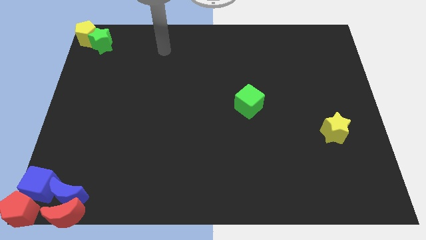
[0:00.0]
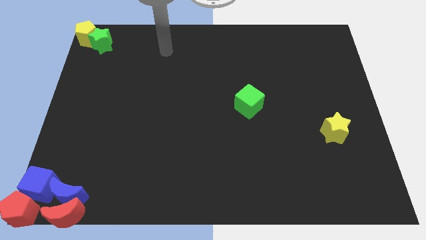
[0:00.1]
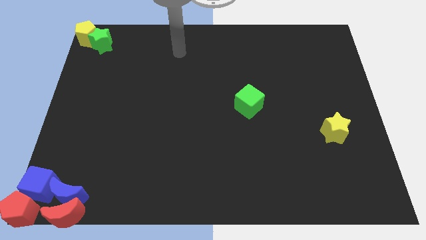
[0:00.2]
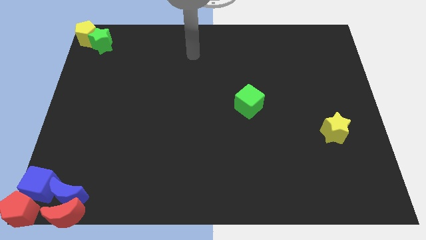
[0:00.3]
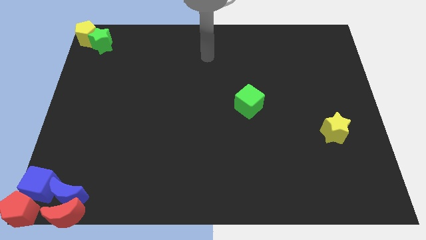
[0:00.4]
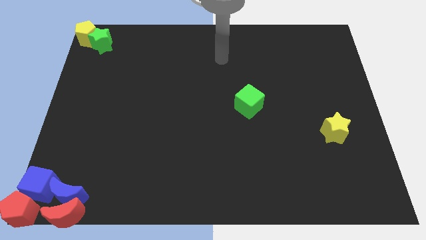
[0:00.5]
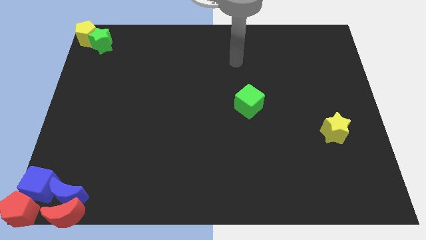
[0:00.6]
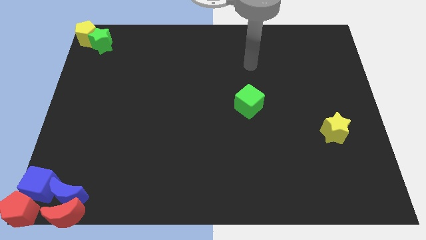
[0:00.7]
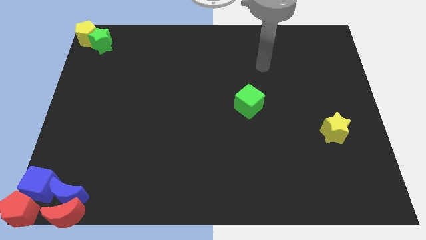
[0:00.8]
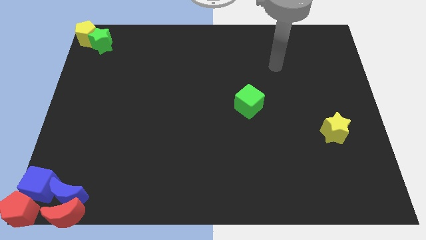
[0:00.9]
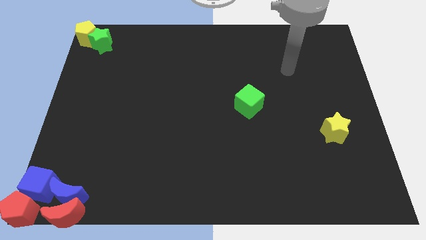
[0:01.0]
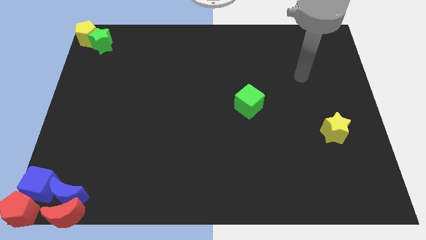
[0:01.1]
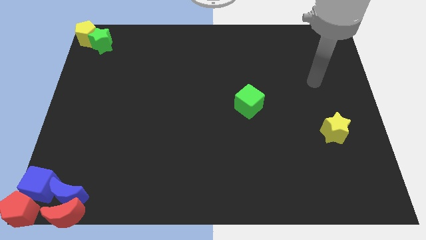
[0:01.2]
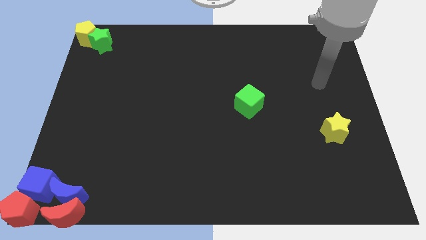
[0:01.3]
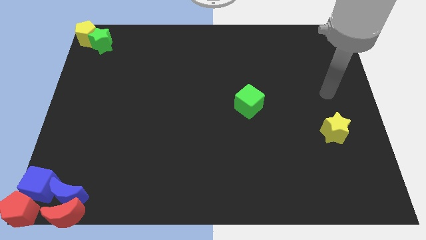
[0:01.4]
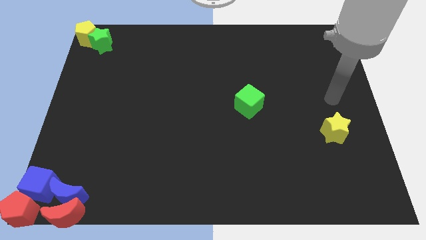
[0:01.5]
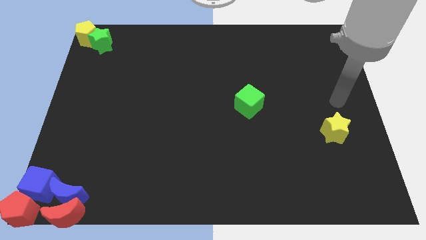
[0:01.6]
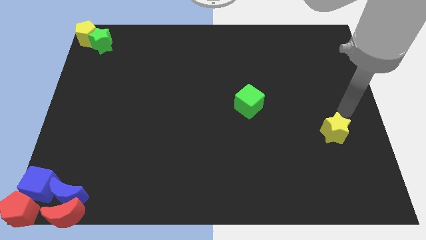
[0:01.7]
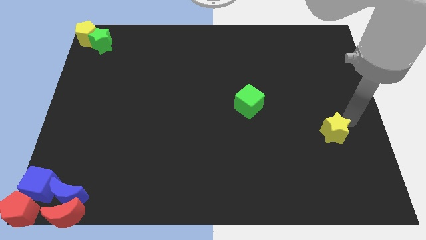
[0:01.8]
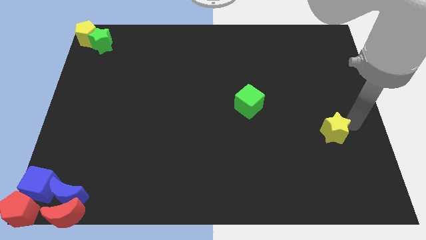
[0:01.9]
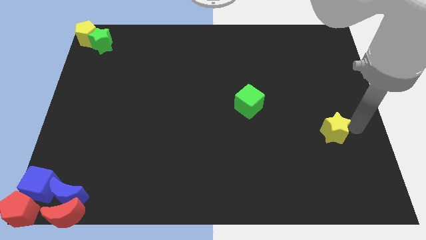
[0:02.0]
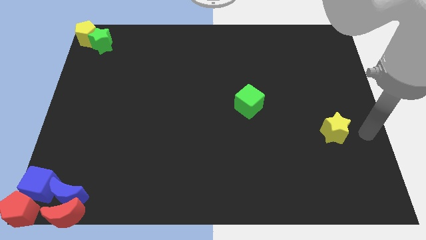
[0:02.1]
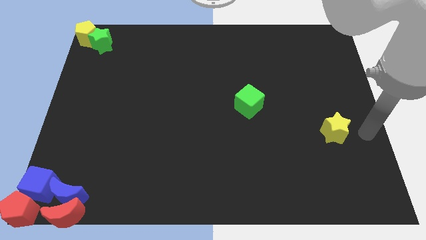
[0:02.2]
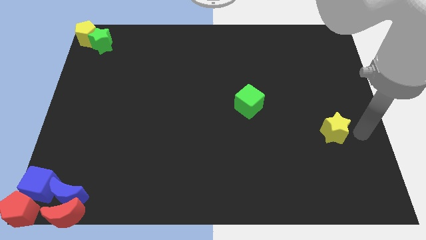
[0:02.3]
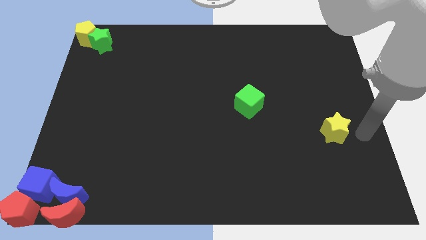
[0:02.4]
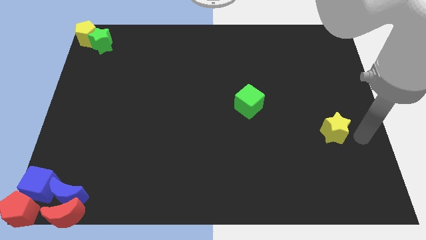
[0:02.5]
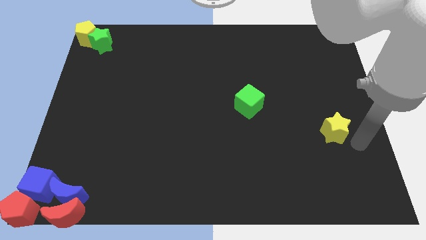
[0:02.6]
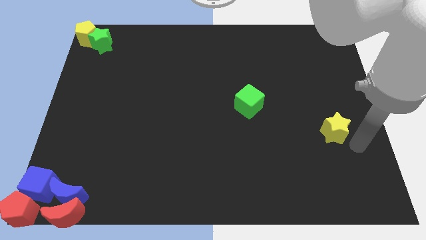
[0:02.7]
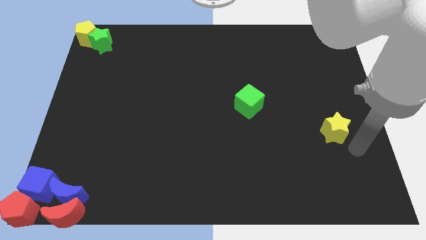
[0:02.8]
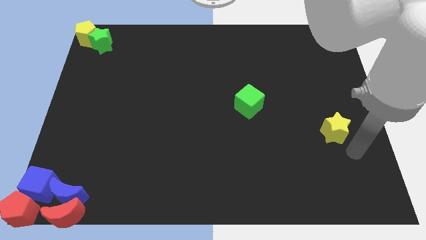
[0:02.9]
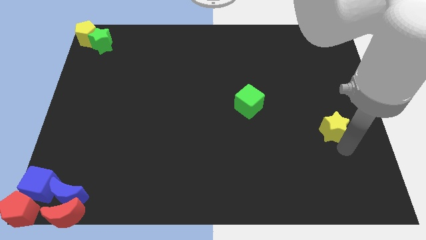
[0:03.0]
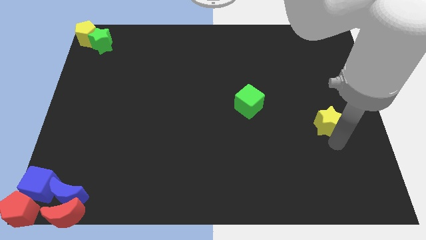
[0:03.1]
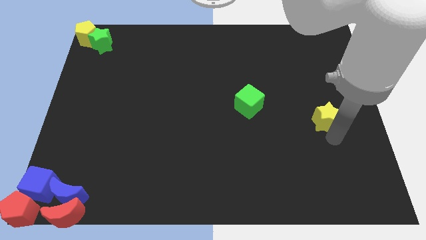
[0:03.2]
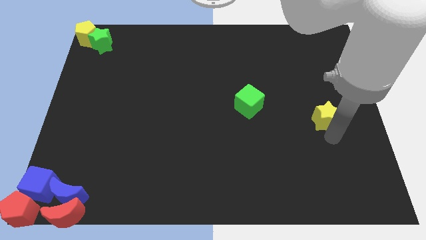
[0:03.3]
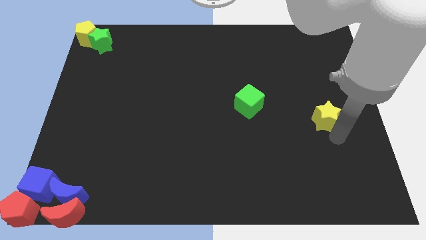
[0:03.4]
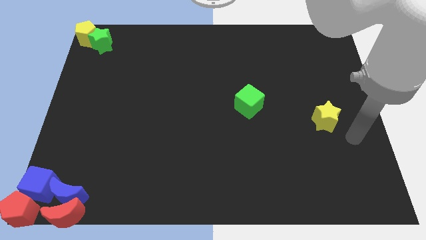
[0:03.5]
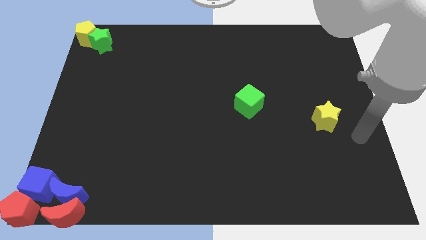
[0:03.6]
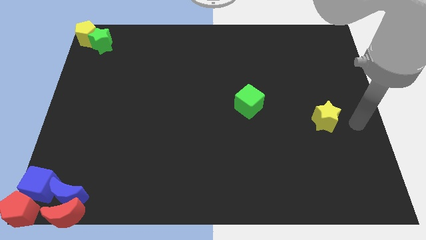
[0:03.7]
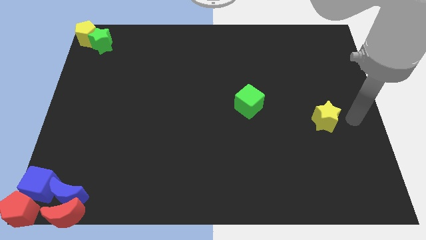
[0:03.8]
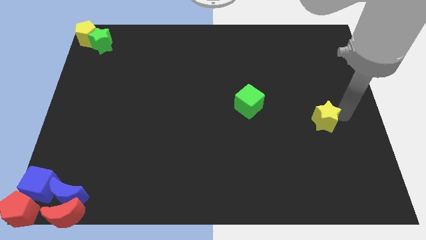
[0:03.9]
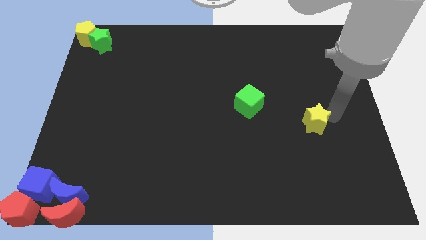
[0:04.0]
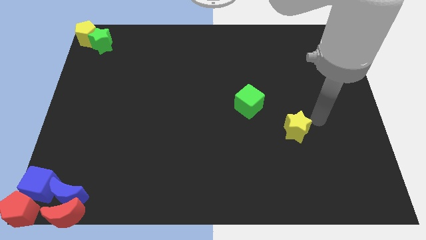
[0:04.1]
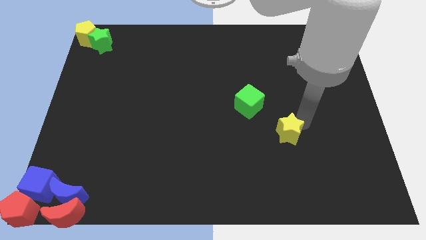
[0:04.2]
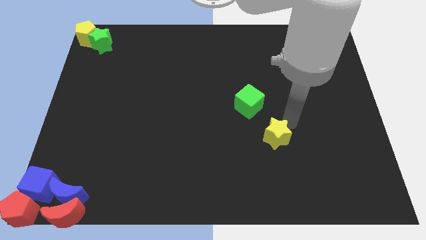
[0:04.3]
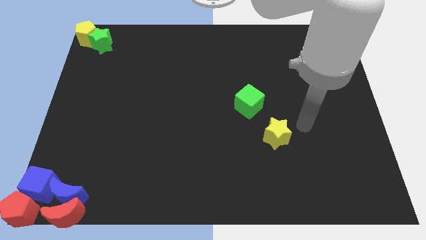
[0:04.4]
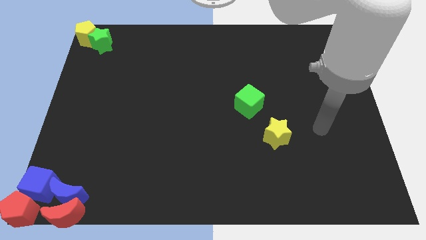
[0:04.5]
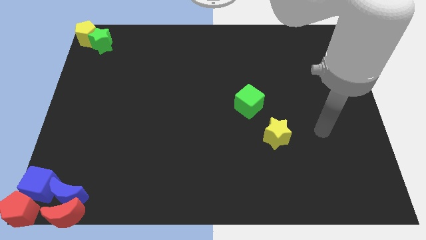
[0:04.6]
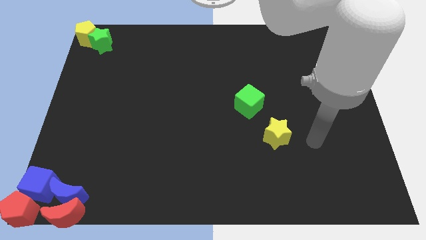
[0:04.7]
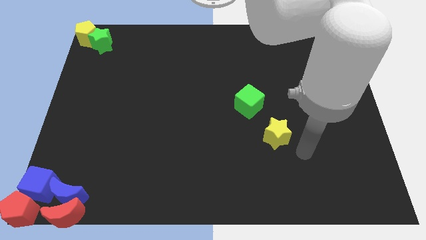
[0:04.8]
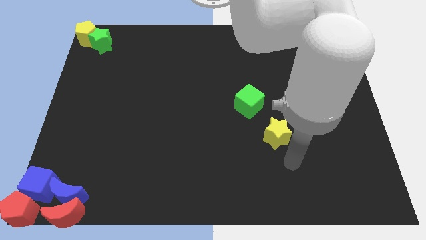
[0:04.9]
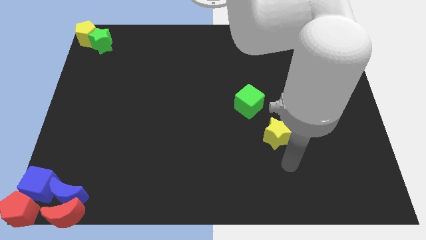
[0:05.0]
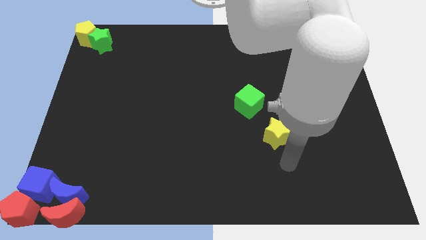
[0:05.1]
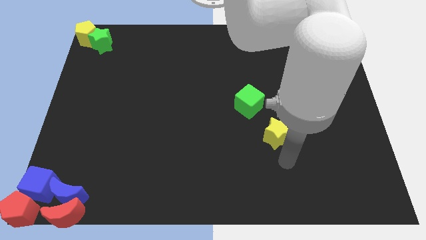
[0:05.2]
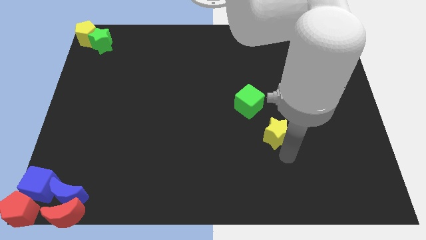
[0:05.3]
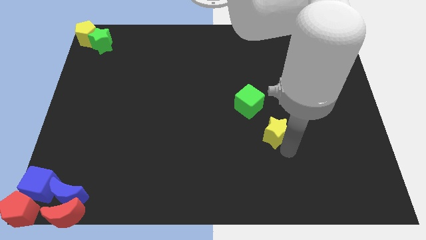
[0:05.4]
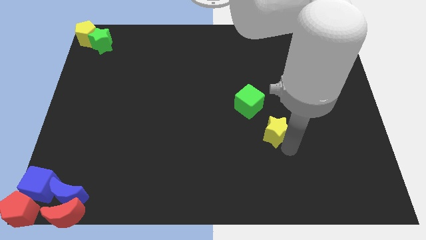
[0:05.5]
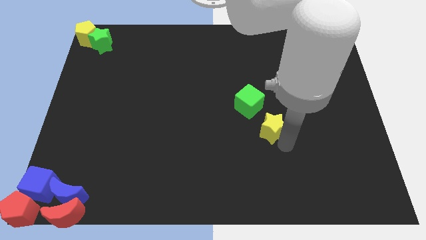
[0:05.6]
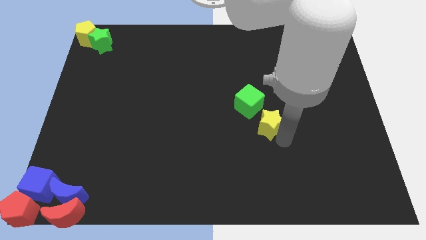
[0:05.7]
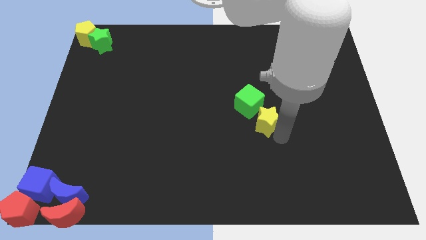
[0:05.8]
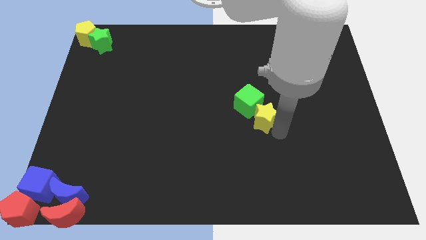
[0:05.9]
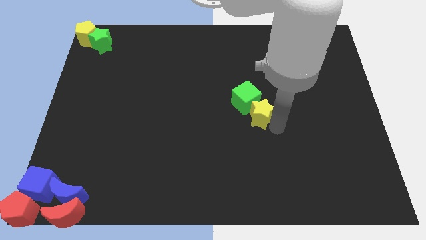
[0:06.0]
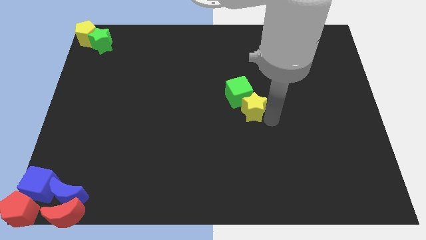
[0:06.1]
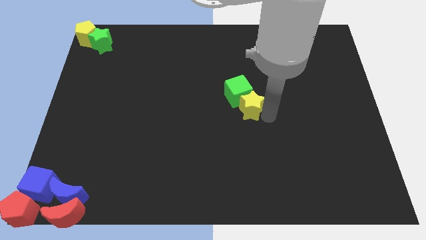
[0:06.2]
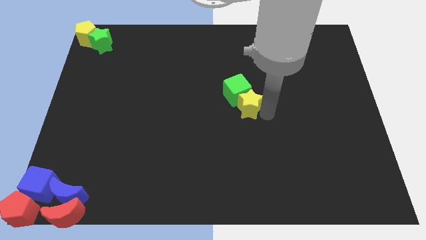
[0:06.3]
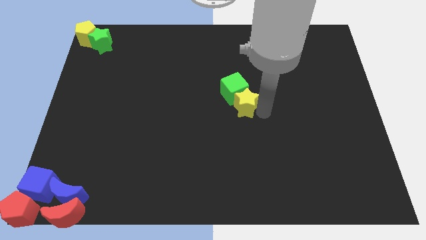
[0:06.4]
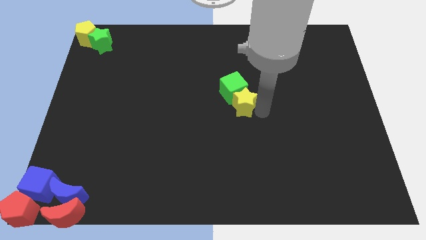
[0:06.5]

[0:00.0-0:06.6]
push the yellow star into the green cube

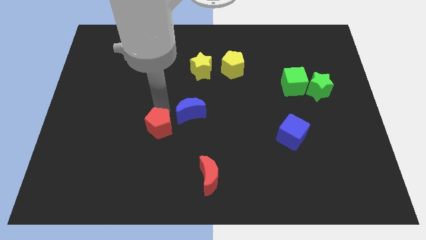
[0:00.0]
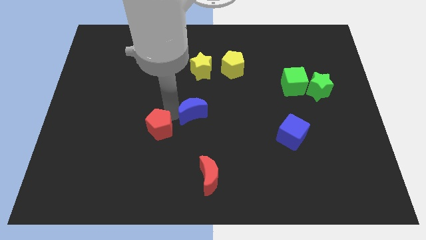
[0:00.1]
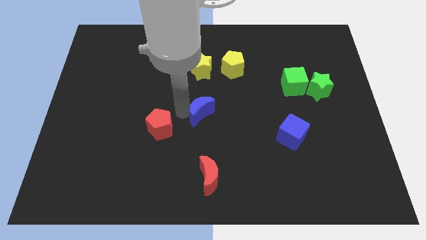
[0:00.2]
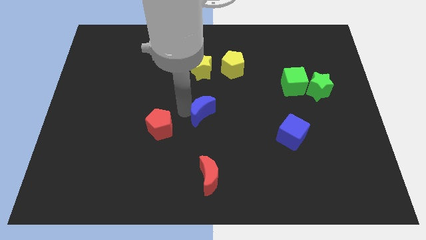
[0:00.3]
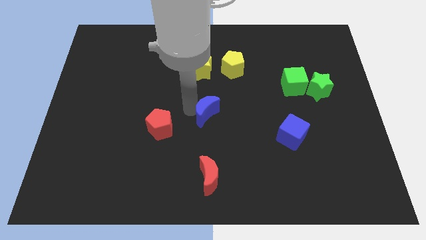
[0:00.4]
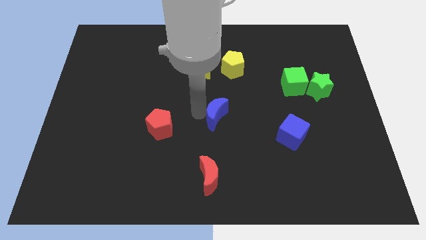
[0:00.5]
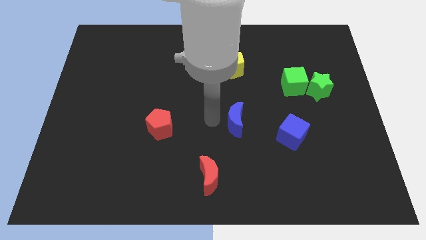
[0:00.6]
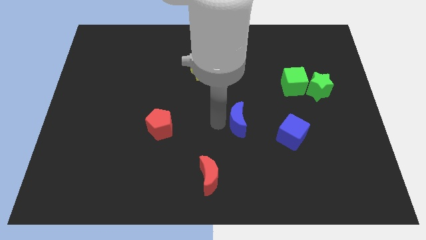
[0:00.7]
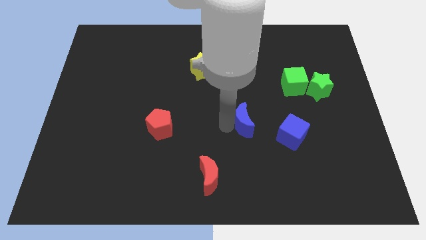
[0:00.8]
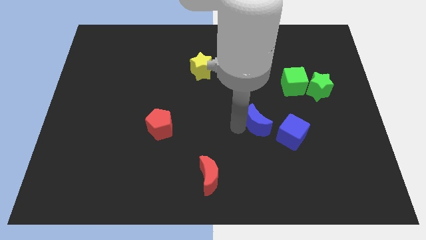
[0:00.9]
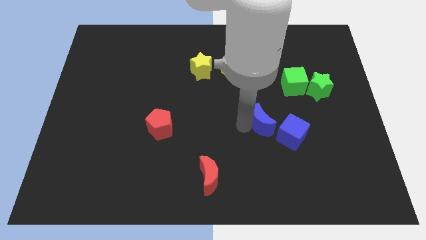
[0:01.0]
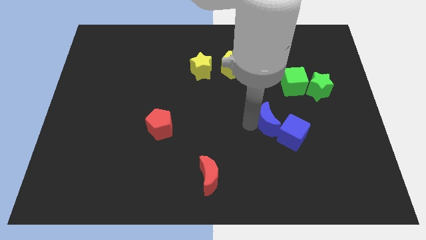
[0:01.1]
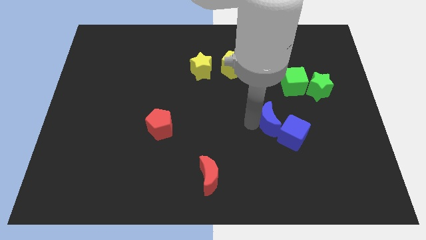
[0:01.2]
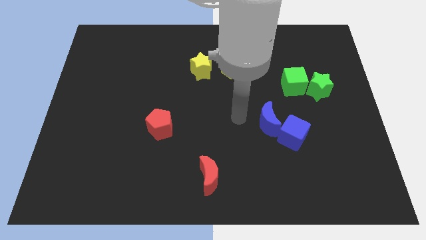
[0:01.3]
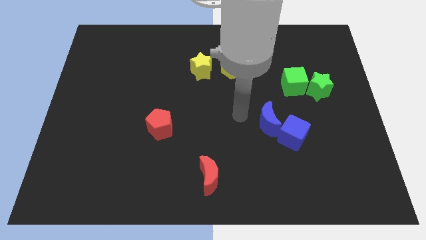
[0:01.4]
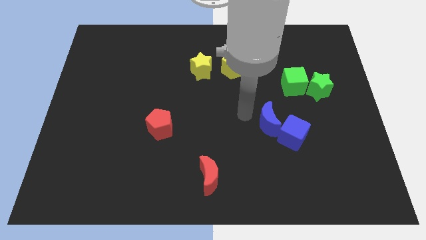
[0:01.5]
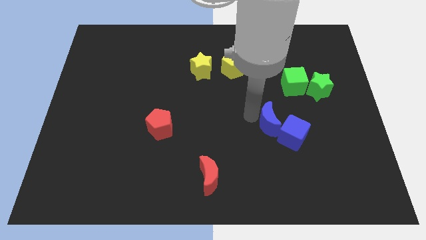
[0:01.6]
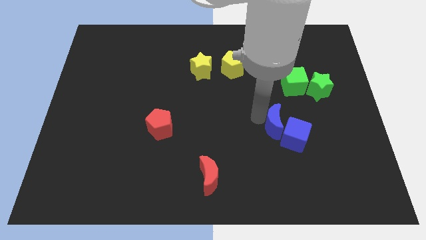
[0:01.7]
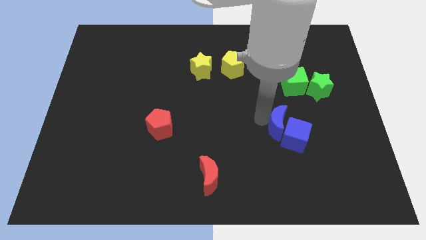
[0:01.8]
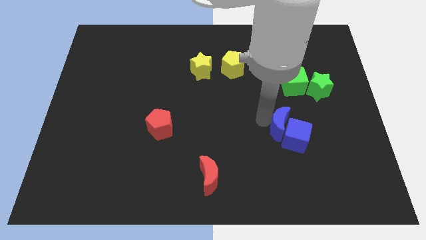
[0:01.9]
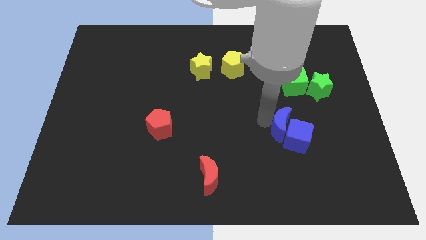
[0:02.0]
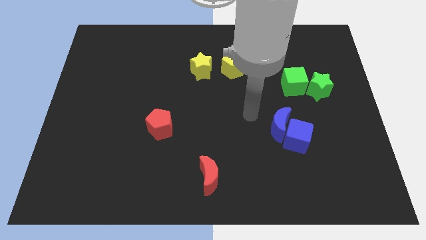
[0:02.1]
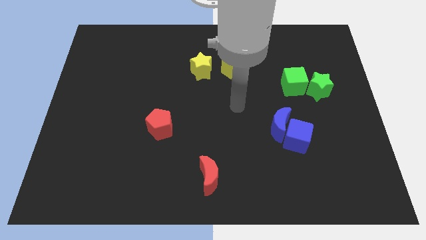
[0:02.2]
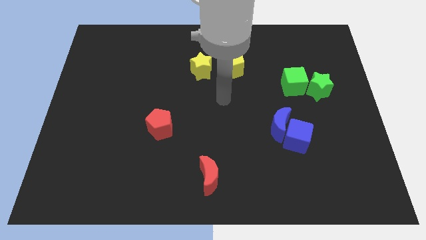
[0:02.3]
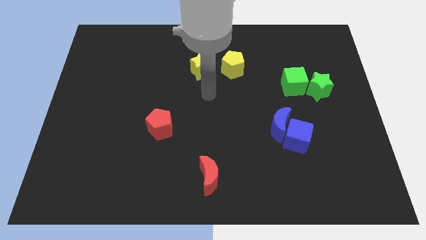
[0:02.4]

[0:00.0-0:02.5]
move the blue moon into the left side of the blue cube
